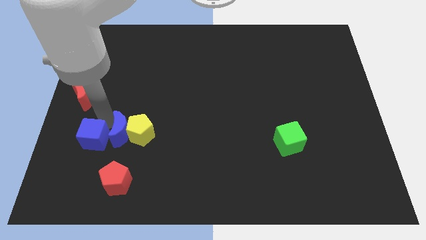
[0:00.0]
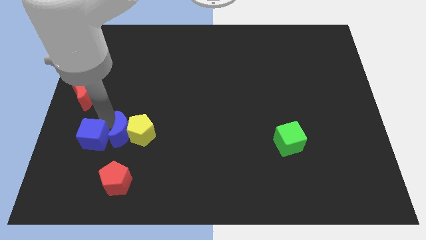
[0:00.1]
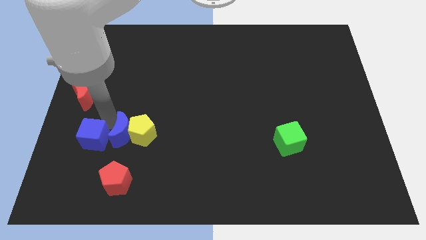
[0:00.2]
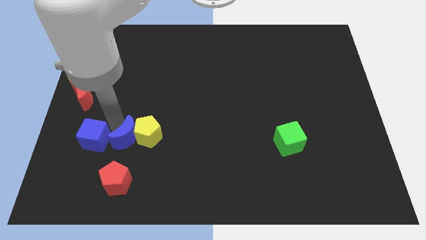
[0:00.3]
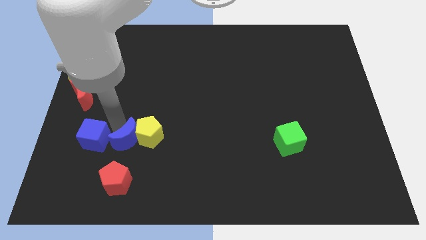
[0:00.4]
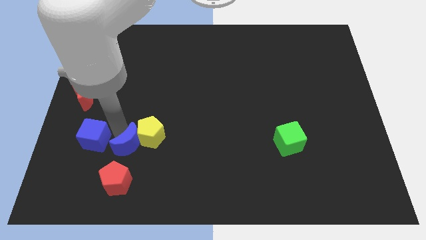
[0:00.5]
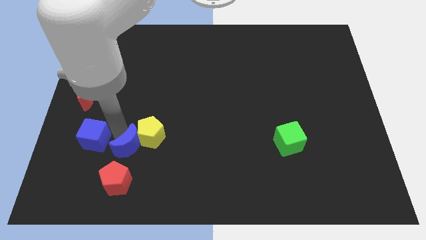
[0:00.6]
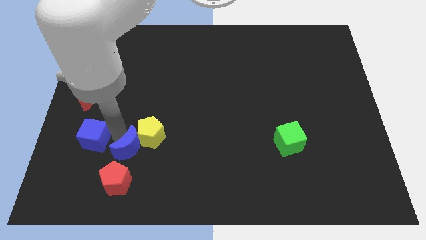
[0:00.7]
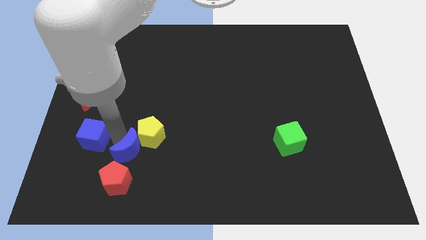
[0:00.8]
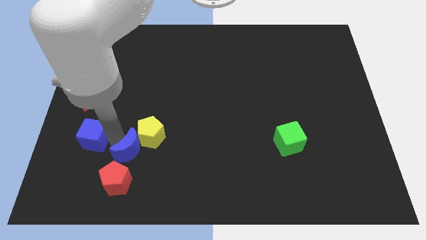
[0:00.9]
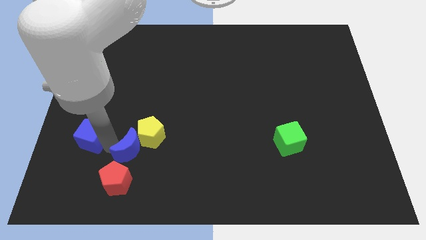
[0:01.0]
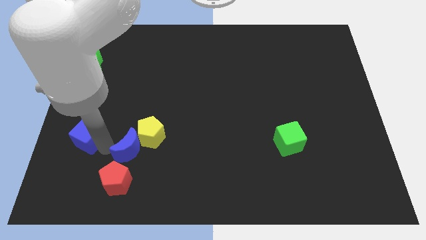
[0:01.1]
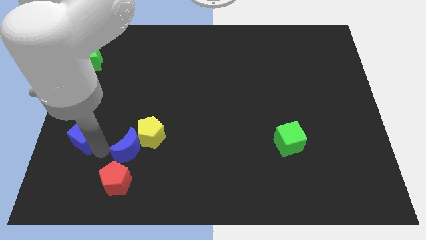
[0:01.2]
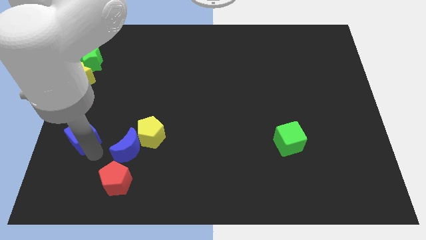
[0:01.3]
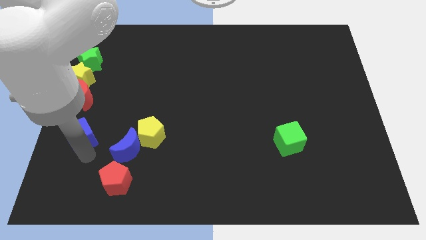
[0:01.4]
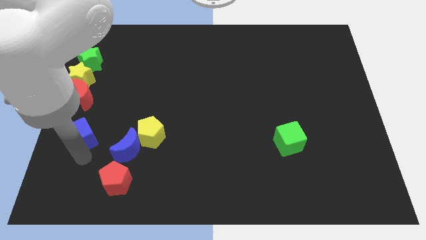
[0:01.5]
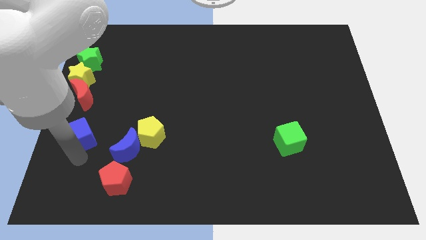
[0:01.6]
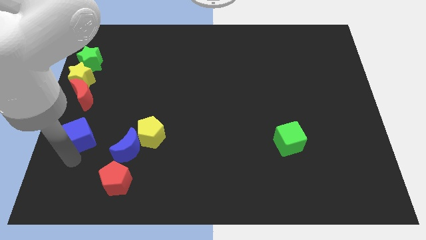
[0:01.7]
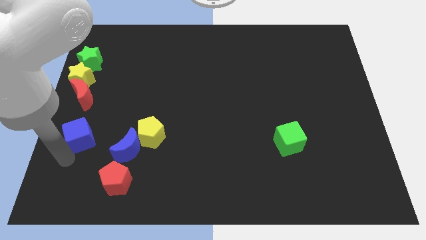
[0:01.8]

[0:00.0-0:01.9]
separate blue cube and blue crescent

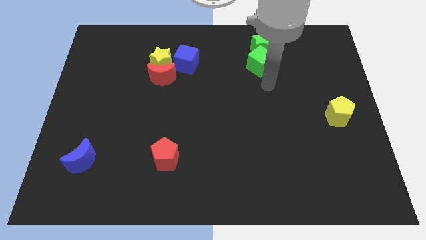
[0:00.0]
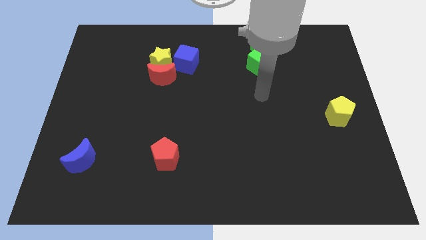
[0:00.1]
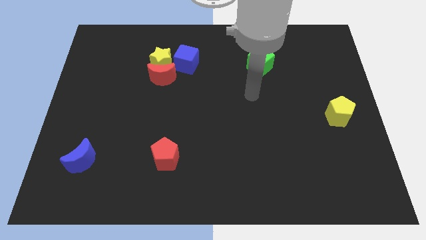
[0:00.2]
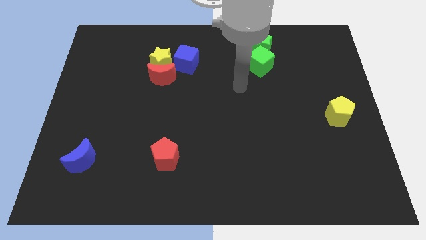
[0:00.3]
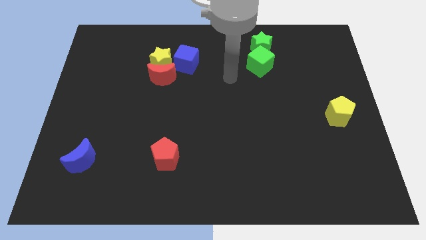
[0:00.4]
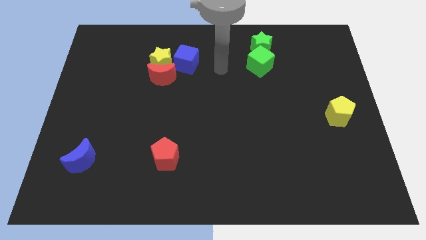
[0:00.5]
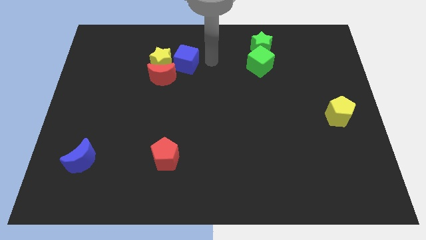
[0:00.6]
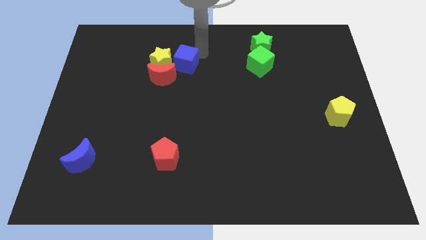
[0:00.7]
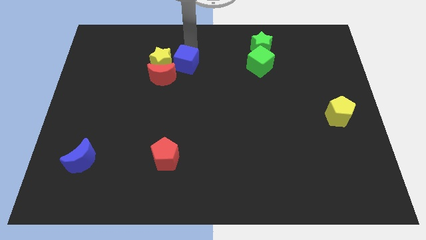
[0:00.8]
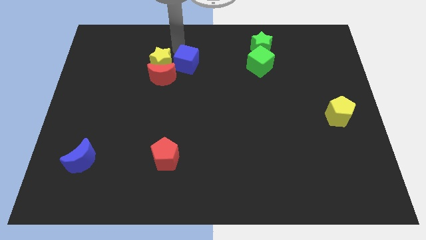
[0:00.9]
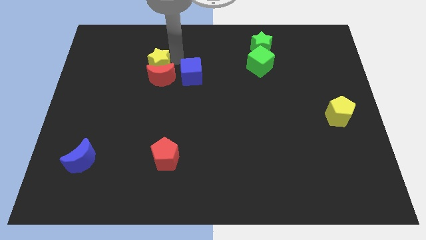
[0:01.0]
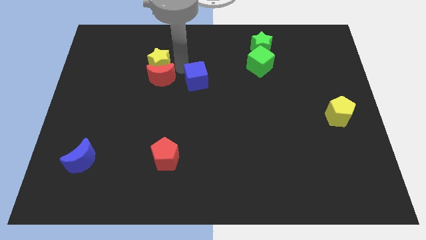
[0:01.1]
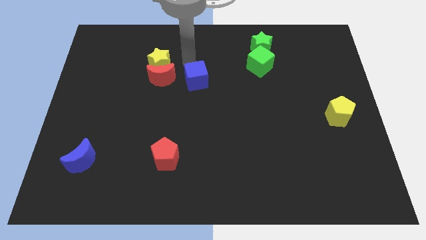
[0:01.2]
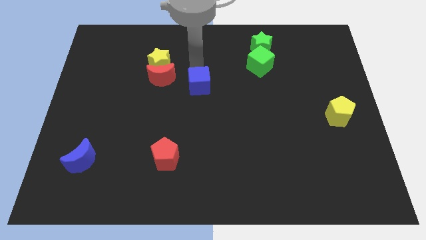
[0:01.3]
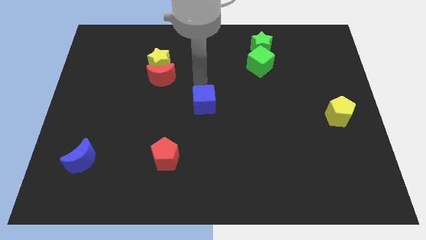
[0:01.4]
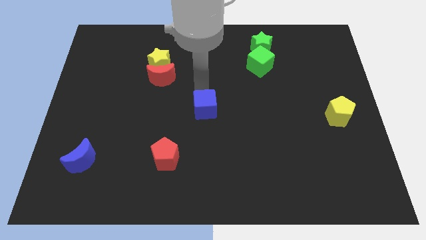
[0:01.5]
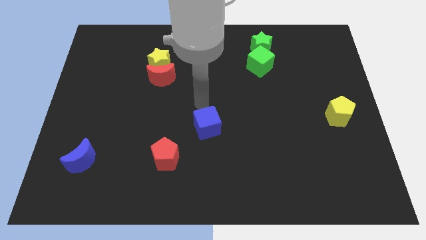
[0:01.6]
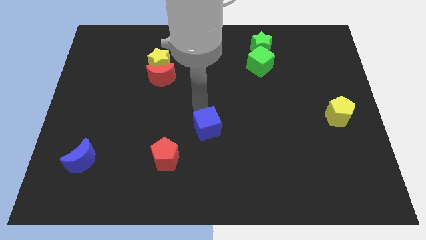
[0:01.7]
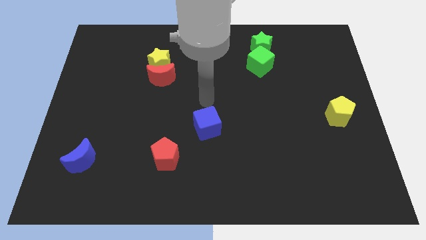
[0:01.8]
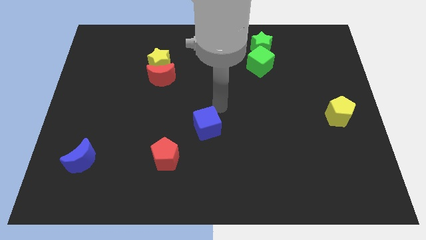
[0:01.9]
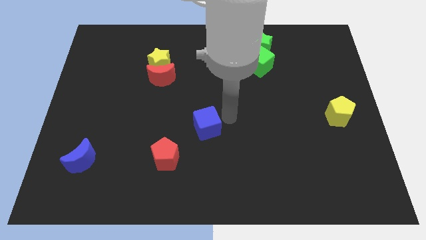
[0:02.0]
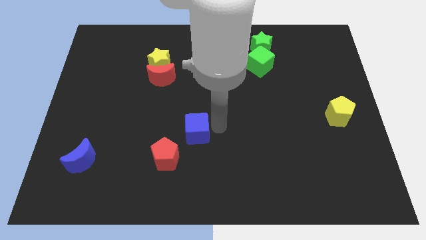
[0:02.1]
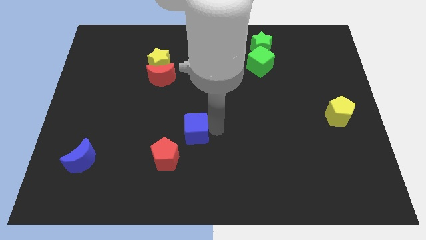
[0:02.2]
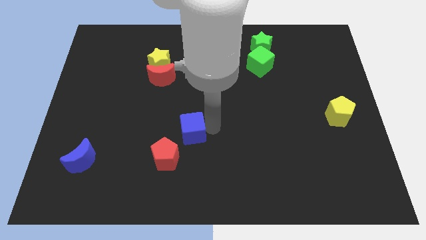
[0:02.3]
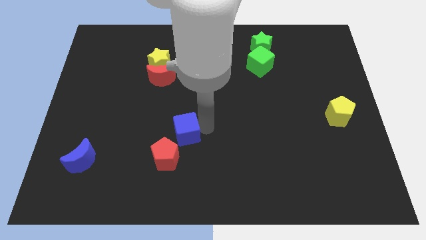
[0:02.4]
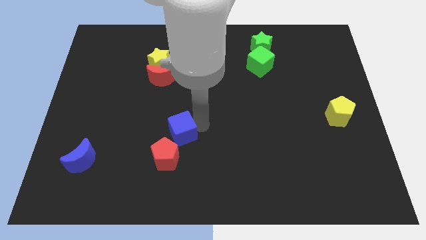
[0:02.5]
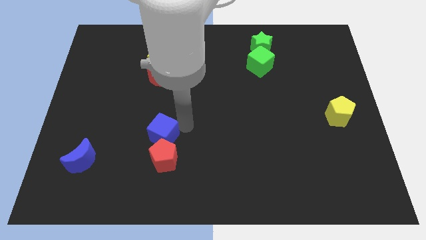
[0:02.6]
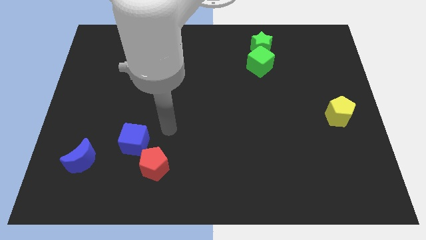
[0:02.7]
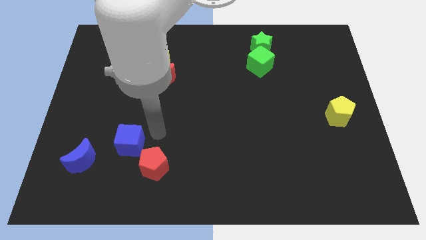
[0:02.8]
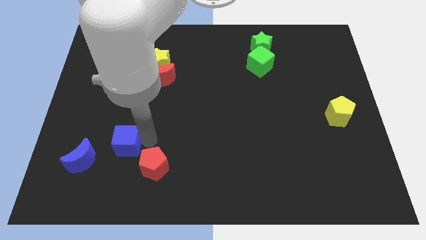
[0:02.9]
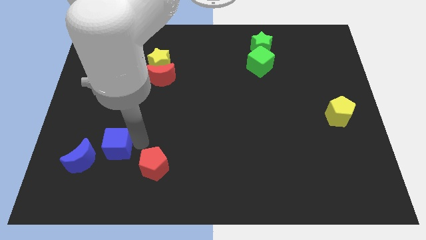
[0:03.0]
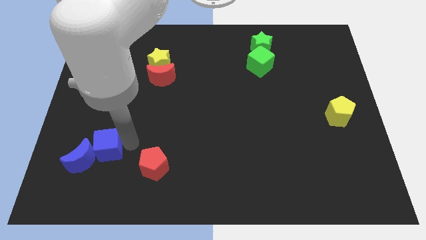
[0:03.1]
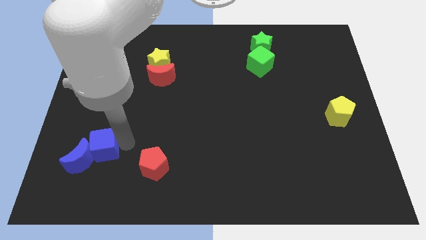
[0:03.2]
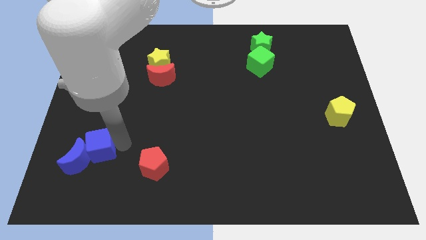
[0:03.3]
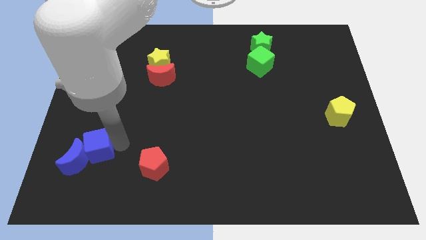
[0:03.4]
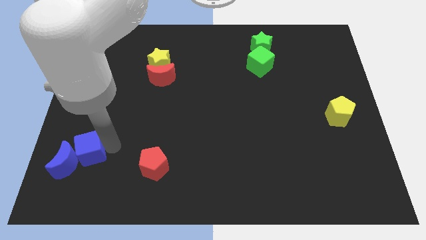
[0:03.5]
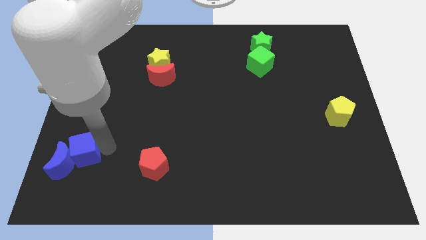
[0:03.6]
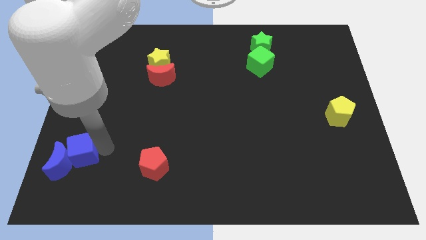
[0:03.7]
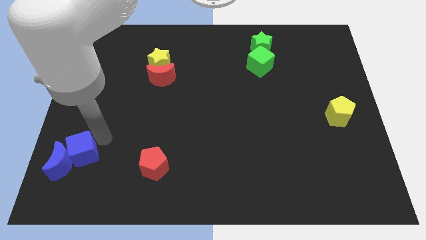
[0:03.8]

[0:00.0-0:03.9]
push blue cube and blue moon to the left corner of the board

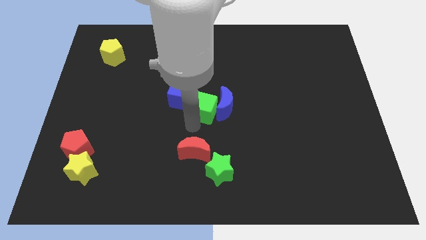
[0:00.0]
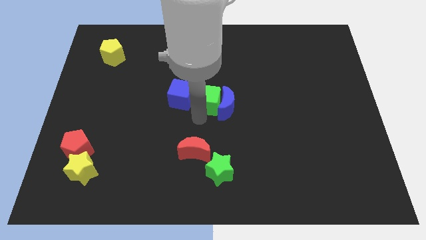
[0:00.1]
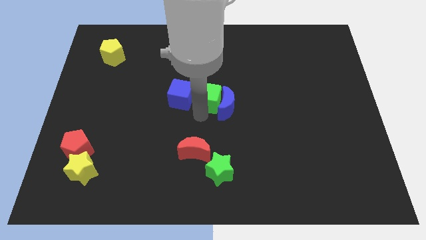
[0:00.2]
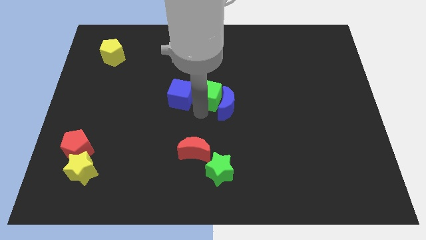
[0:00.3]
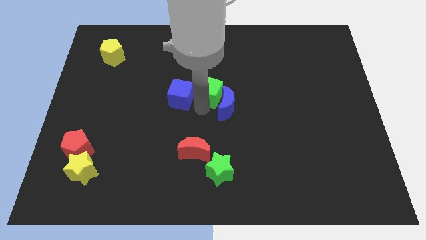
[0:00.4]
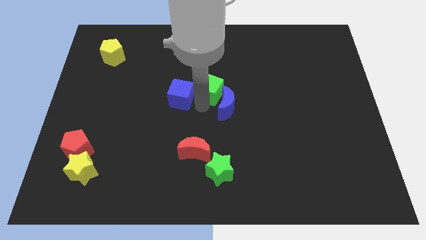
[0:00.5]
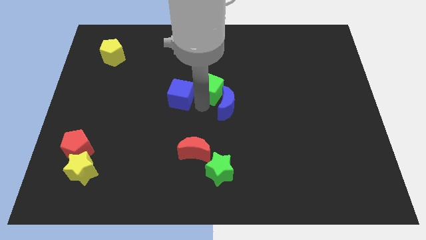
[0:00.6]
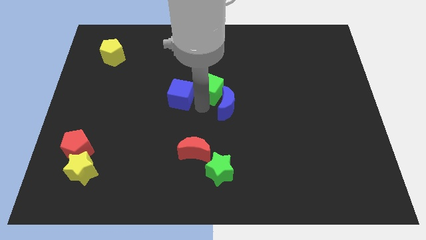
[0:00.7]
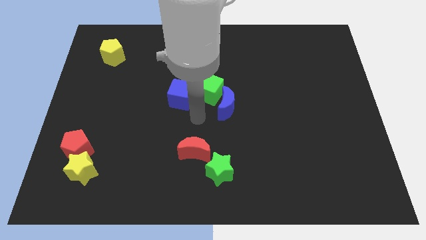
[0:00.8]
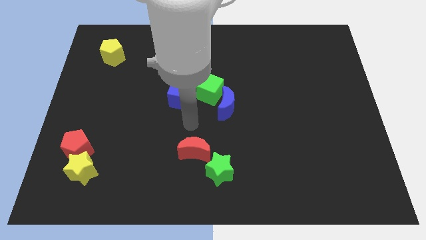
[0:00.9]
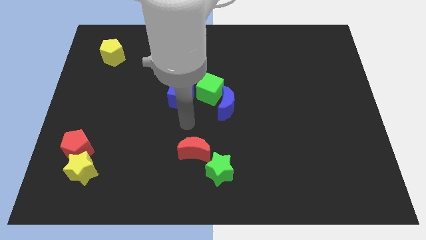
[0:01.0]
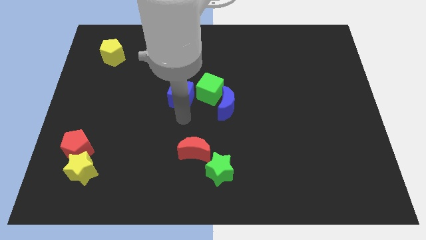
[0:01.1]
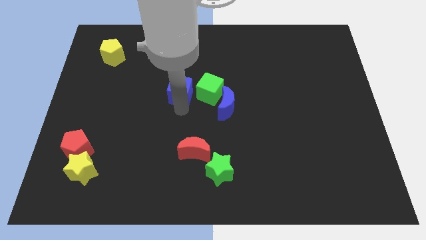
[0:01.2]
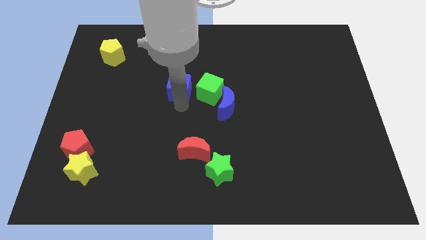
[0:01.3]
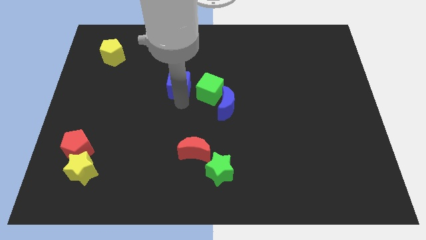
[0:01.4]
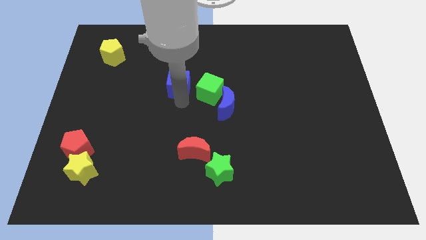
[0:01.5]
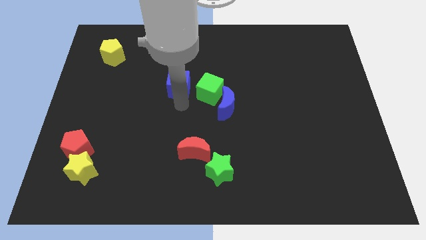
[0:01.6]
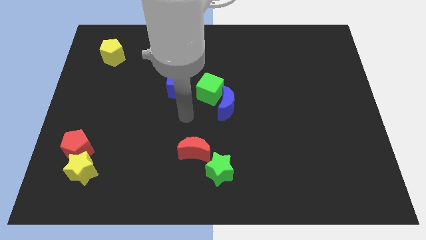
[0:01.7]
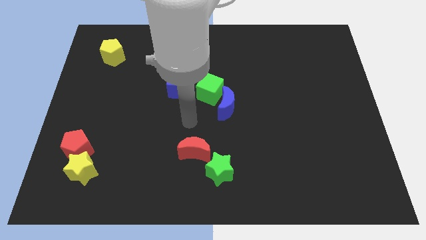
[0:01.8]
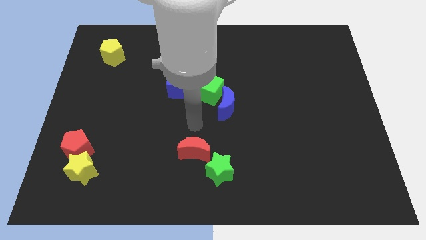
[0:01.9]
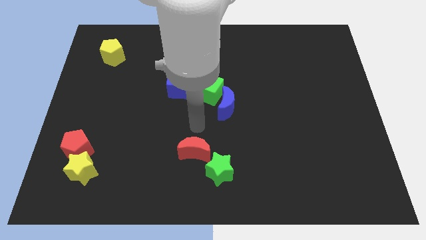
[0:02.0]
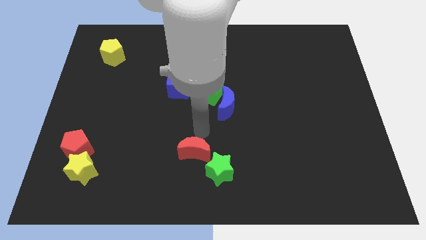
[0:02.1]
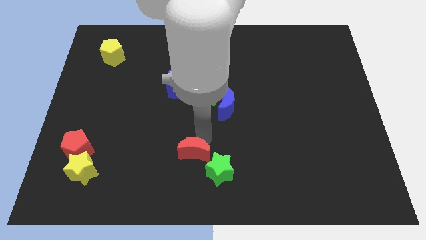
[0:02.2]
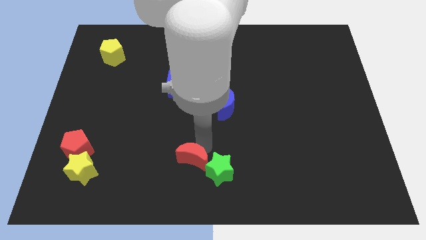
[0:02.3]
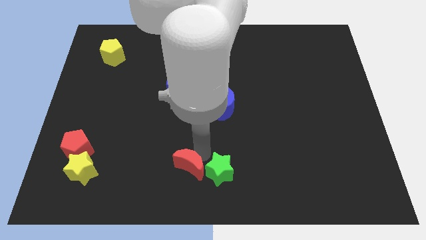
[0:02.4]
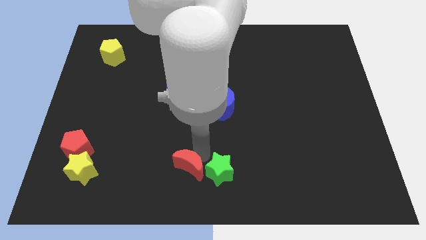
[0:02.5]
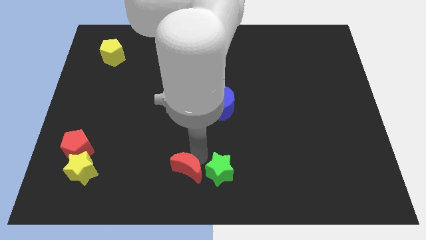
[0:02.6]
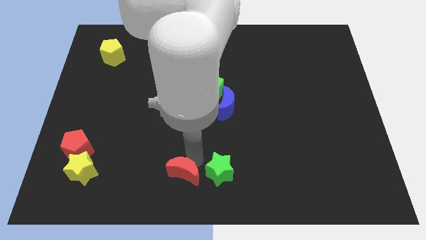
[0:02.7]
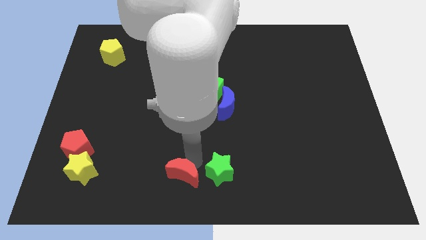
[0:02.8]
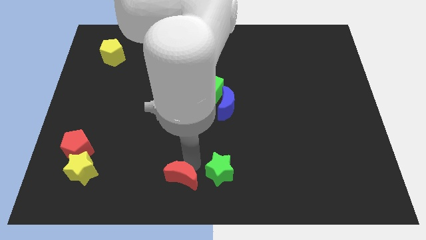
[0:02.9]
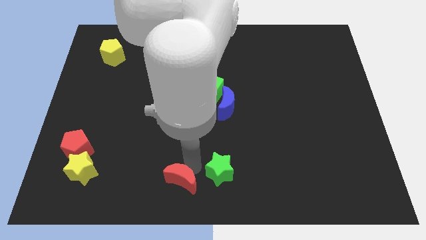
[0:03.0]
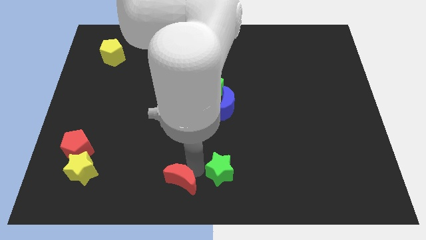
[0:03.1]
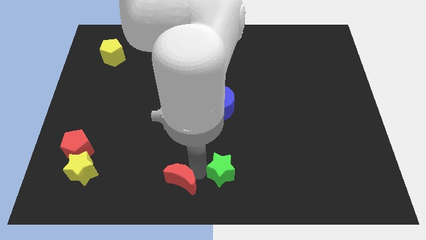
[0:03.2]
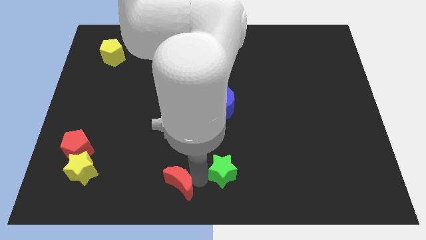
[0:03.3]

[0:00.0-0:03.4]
move the red crescent towards the bottom center
